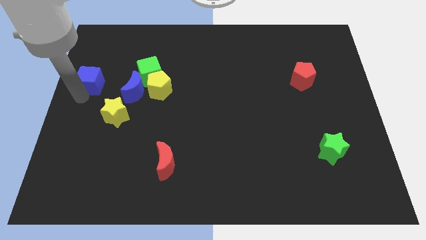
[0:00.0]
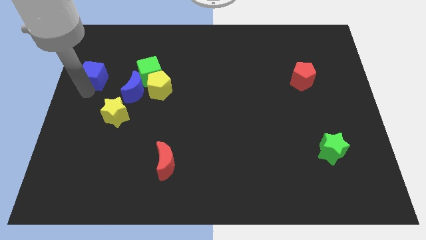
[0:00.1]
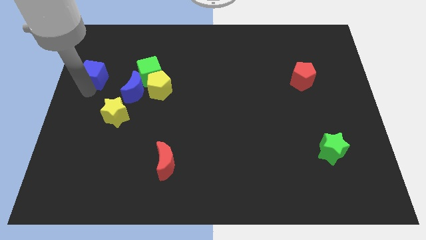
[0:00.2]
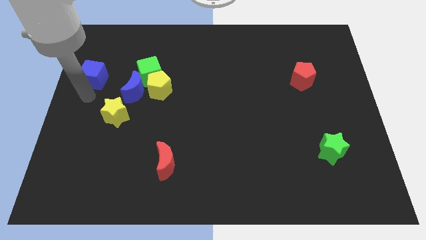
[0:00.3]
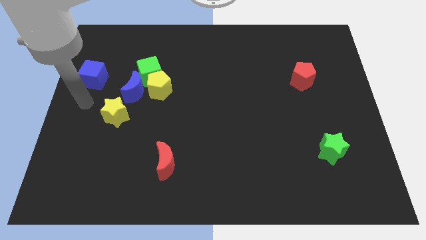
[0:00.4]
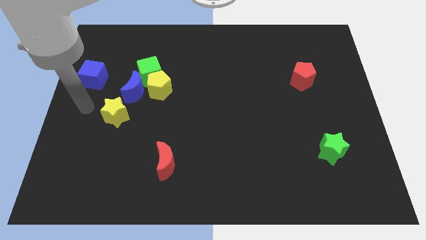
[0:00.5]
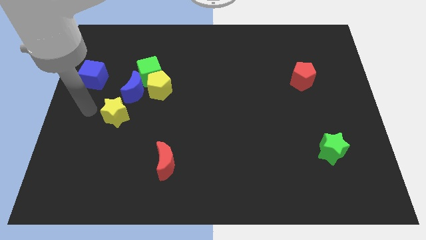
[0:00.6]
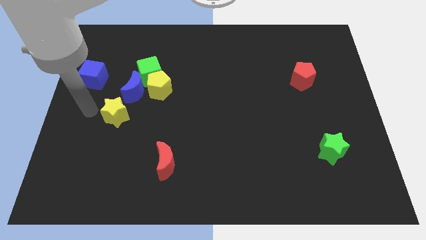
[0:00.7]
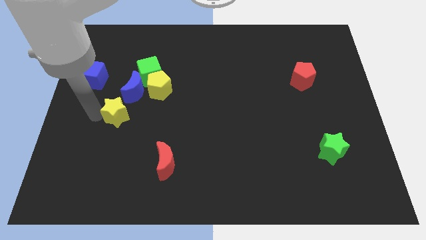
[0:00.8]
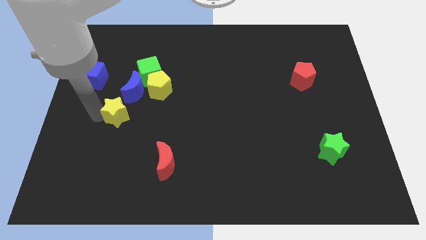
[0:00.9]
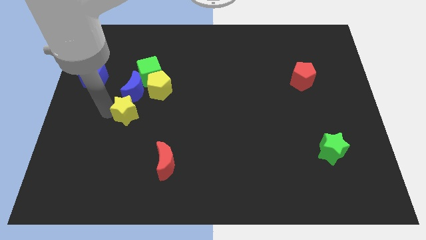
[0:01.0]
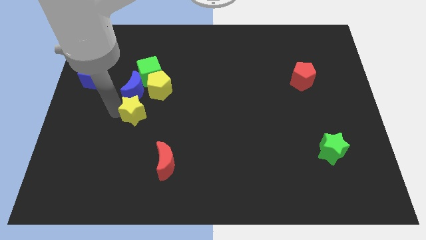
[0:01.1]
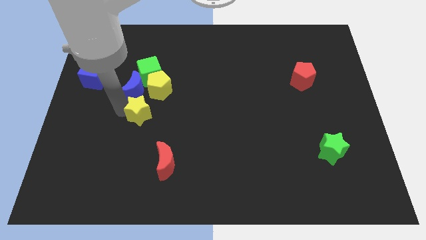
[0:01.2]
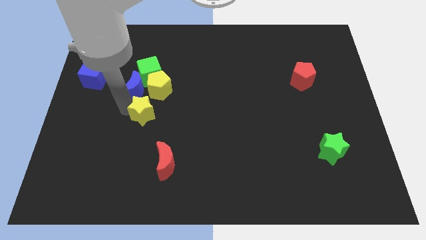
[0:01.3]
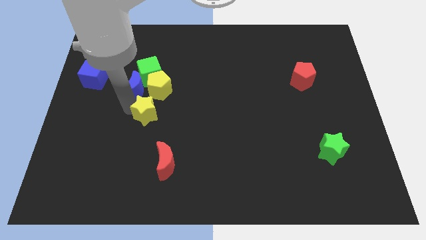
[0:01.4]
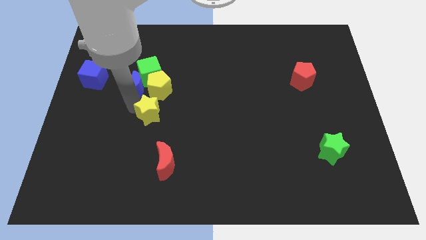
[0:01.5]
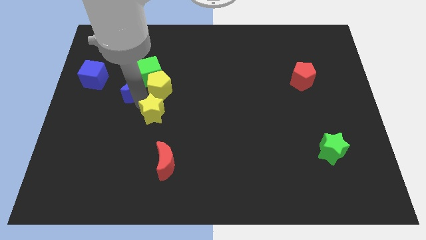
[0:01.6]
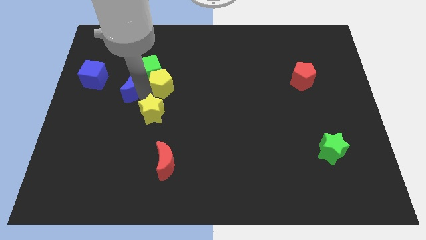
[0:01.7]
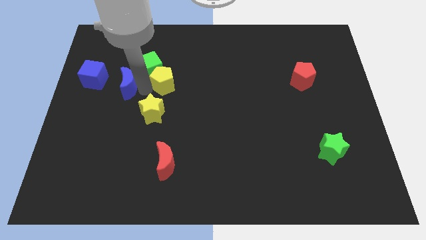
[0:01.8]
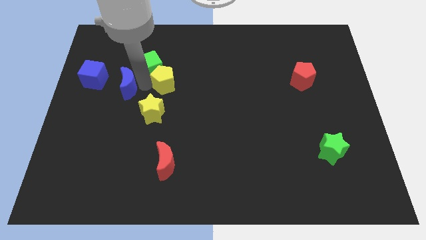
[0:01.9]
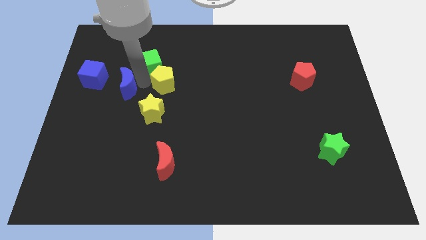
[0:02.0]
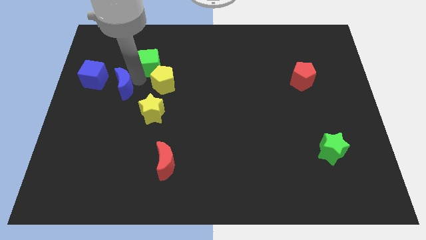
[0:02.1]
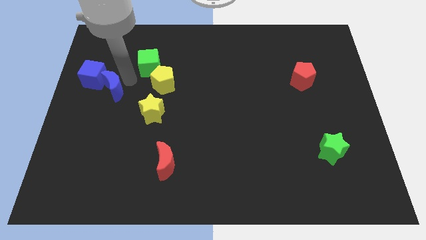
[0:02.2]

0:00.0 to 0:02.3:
move the yellow star parallel to the top of the red crescent

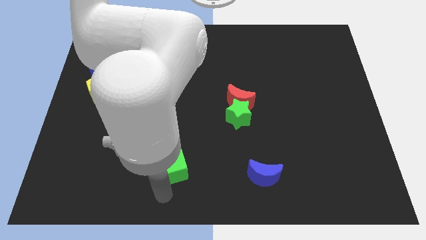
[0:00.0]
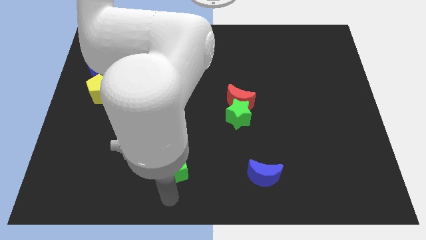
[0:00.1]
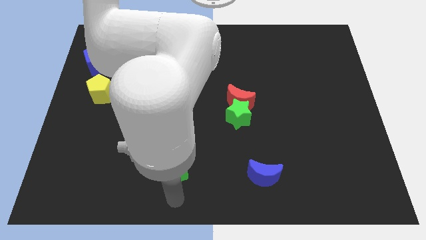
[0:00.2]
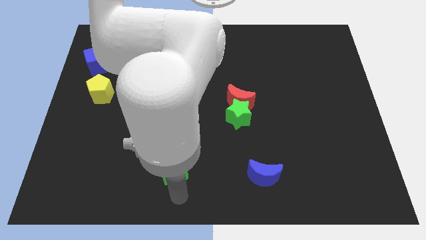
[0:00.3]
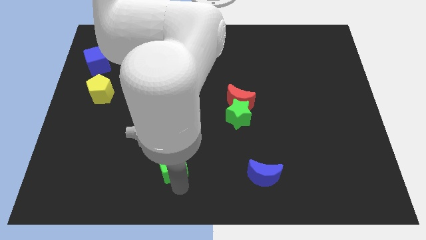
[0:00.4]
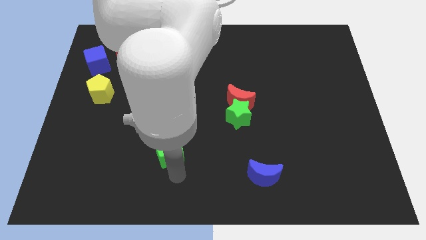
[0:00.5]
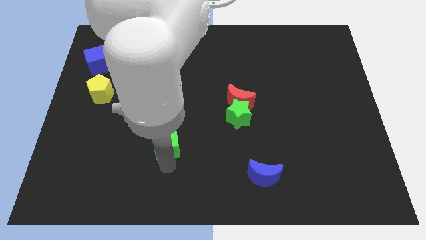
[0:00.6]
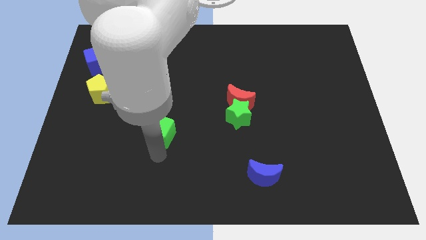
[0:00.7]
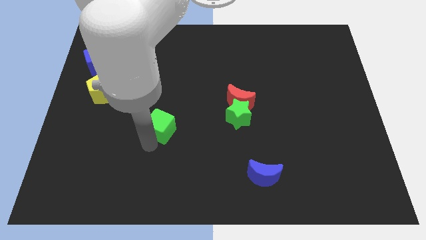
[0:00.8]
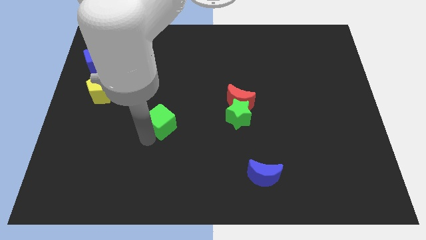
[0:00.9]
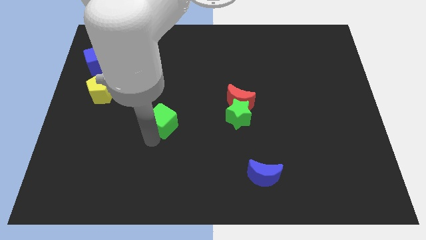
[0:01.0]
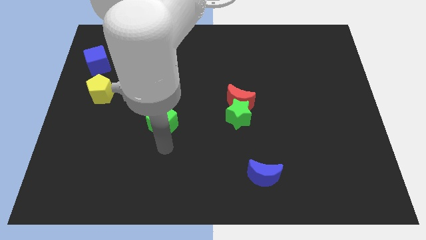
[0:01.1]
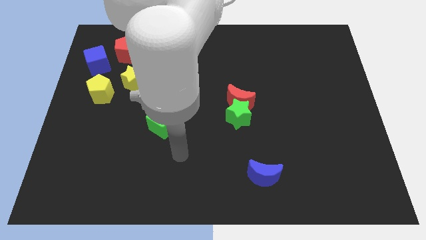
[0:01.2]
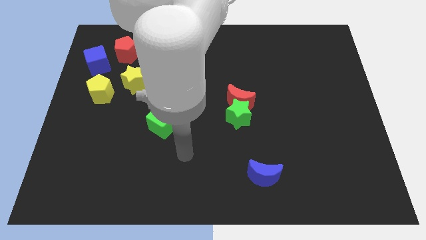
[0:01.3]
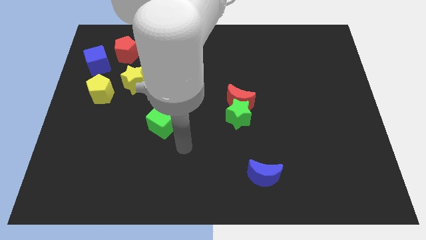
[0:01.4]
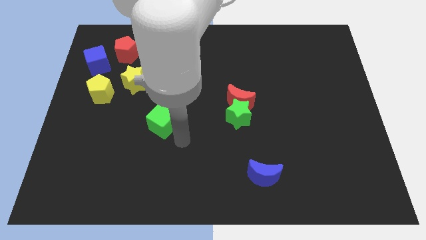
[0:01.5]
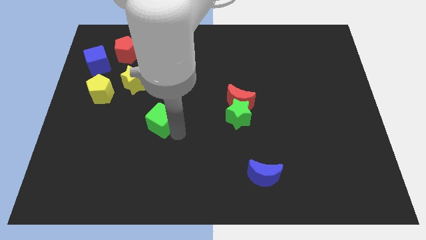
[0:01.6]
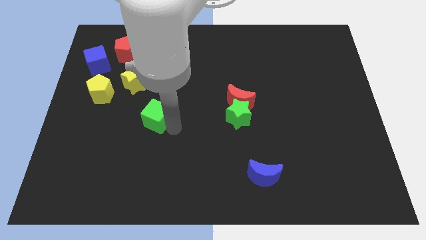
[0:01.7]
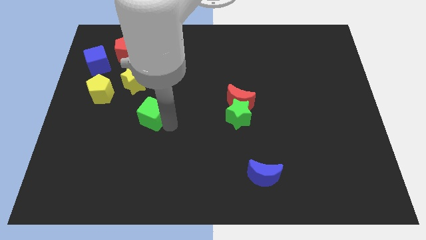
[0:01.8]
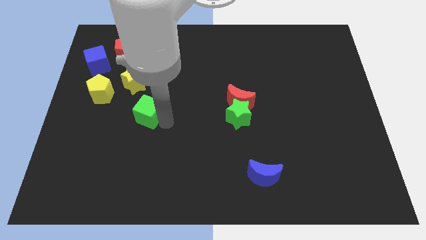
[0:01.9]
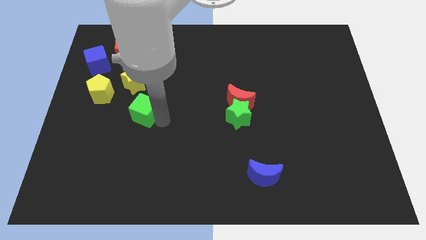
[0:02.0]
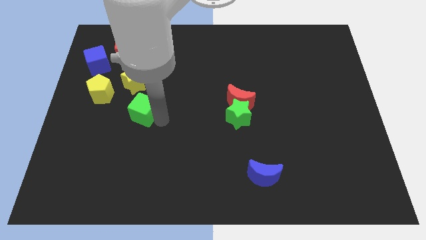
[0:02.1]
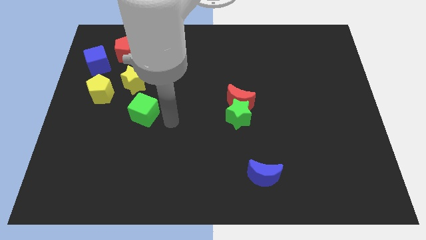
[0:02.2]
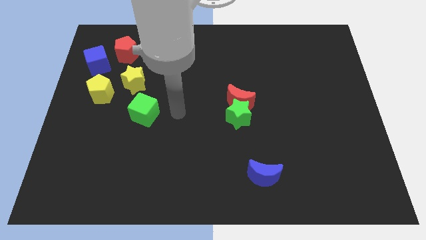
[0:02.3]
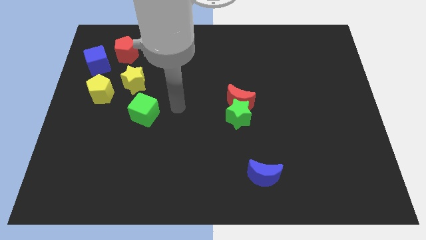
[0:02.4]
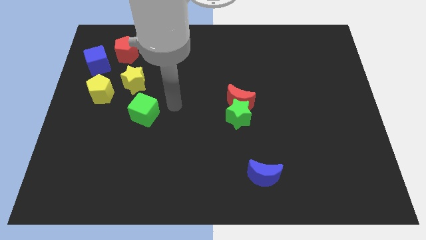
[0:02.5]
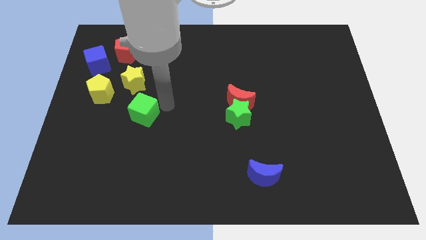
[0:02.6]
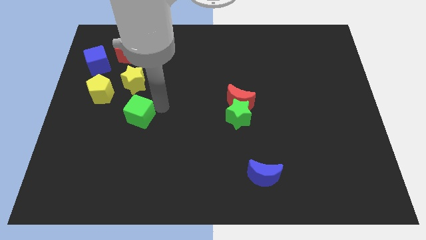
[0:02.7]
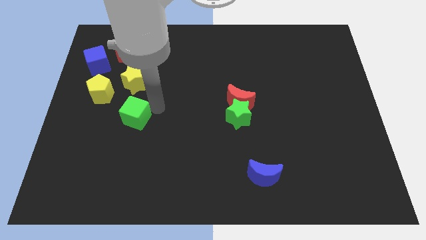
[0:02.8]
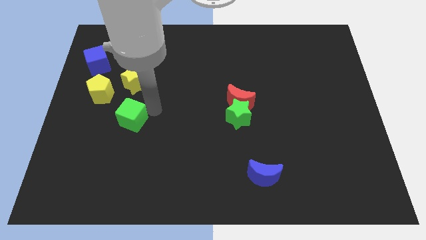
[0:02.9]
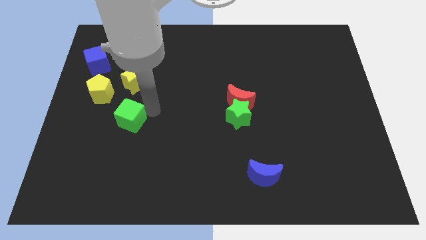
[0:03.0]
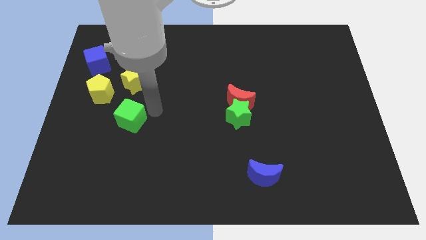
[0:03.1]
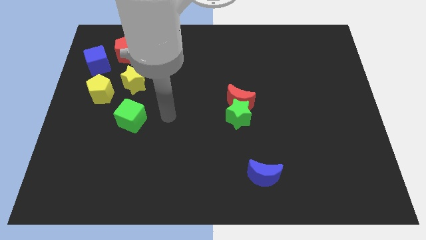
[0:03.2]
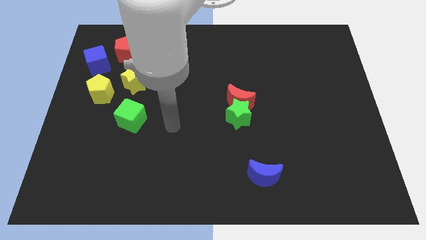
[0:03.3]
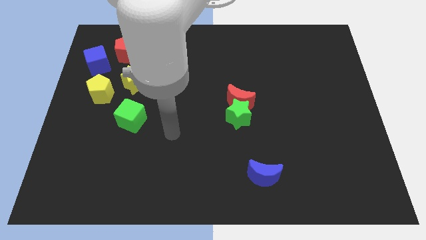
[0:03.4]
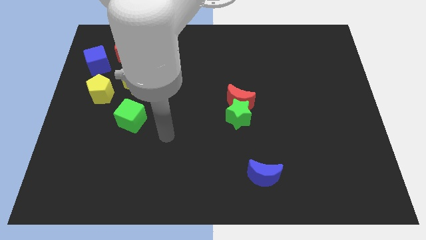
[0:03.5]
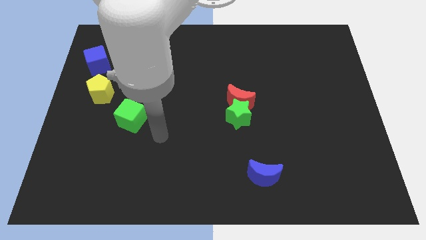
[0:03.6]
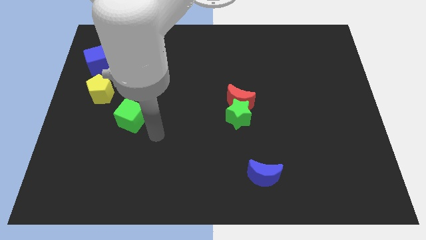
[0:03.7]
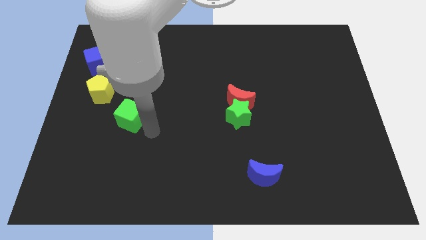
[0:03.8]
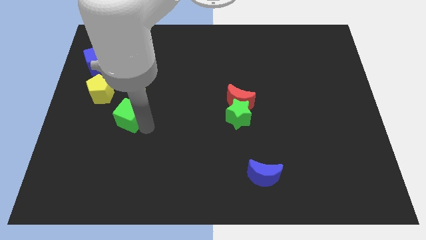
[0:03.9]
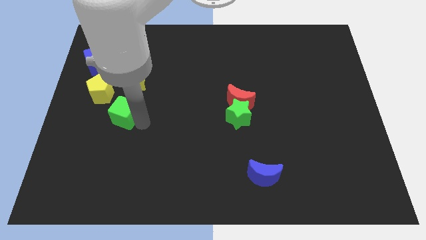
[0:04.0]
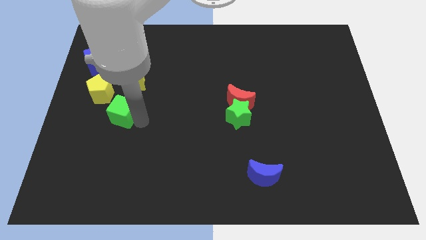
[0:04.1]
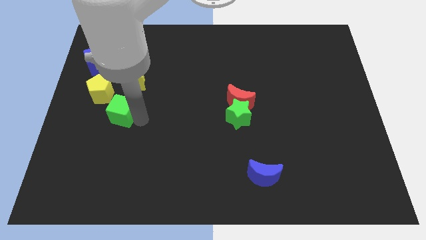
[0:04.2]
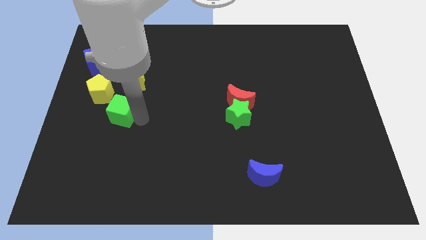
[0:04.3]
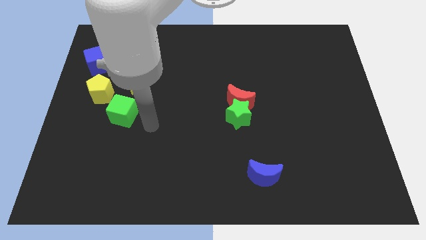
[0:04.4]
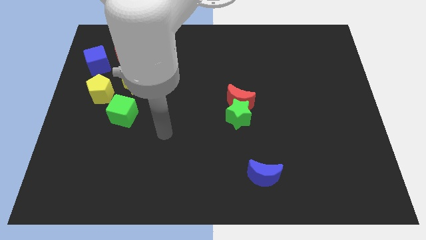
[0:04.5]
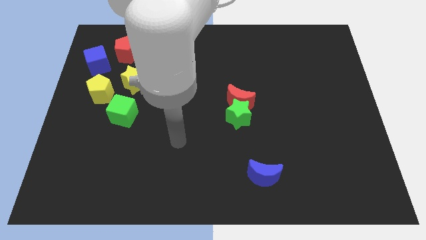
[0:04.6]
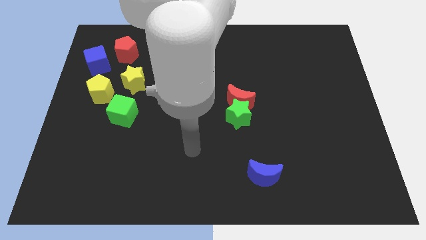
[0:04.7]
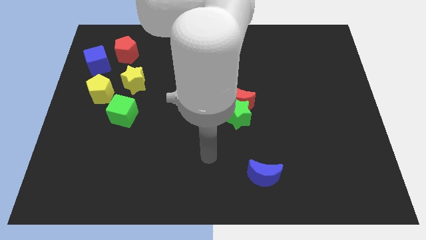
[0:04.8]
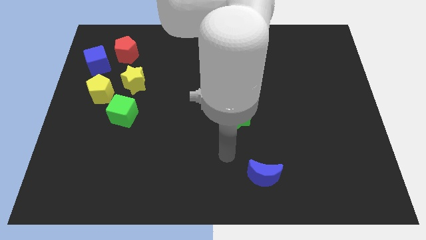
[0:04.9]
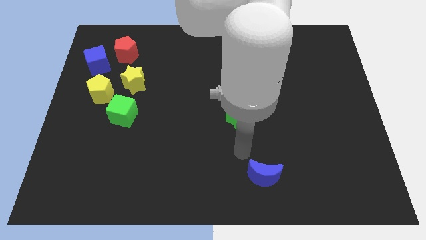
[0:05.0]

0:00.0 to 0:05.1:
push the green cube to the bottom right corner of the yellow pentagon

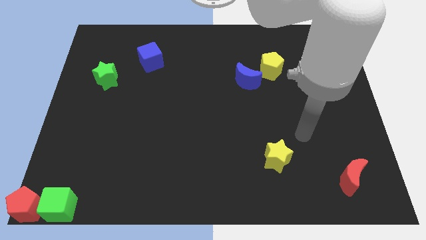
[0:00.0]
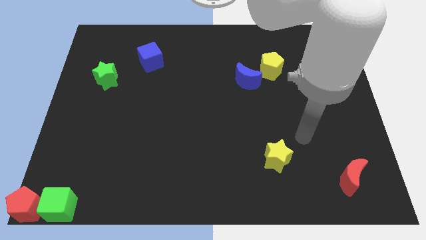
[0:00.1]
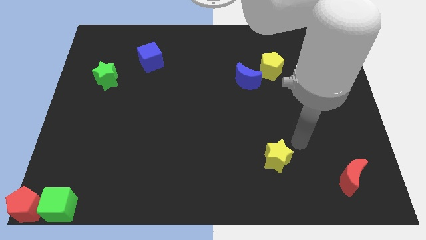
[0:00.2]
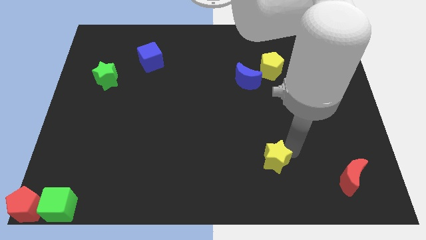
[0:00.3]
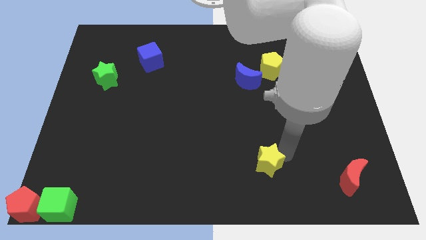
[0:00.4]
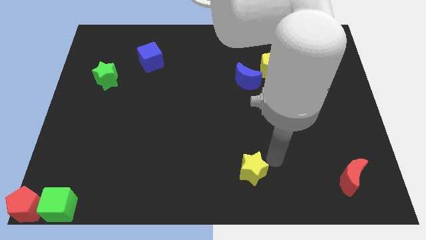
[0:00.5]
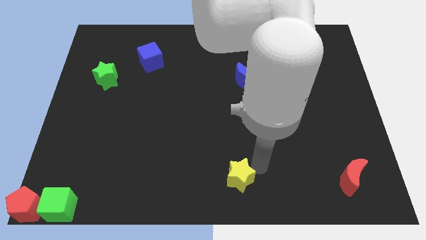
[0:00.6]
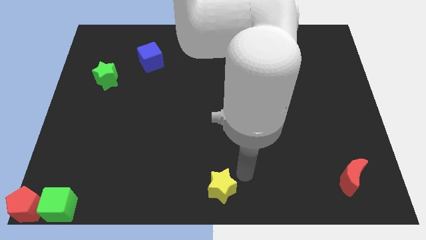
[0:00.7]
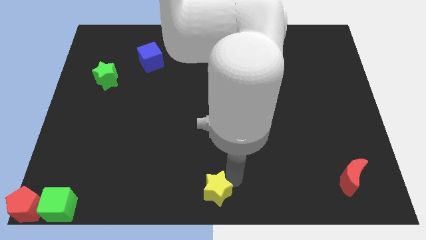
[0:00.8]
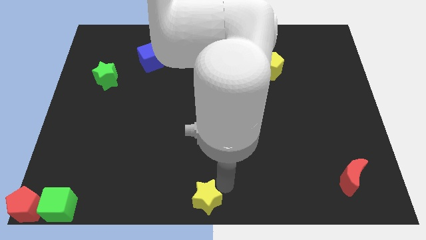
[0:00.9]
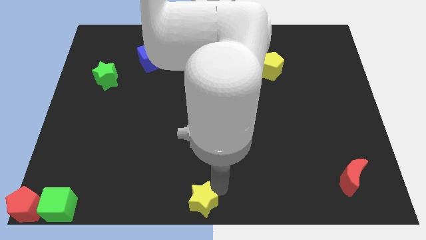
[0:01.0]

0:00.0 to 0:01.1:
place the yellow star at the bottom center of the board

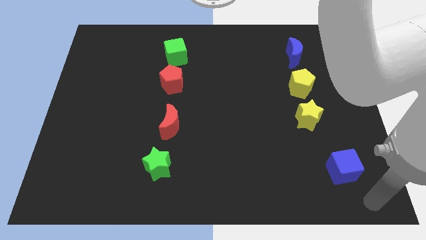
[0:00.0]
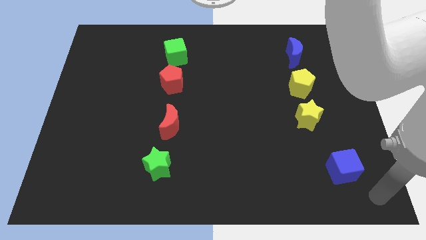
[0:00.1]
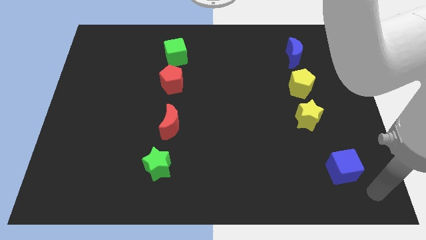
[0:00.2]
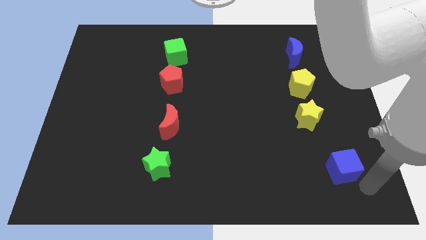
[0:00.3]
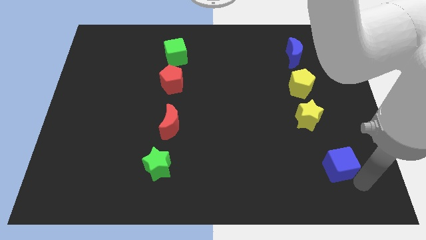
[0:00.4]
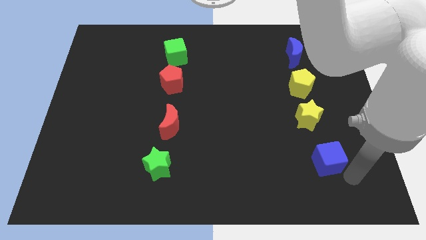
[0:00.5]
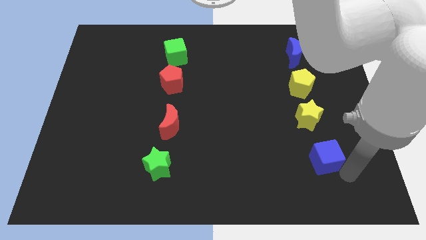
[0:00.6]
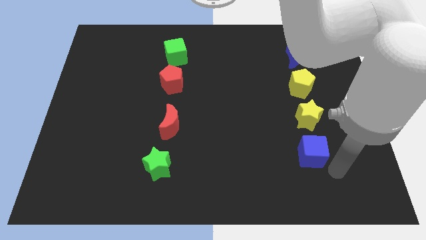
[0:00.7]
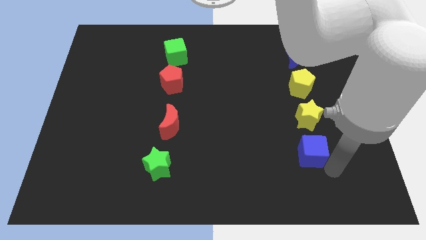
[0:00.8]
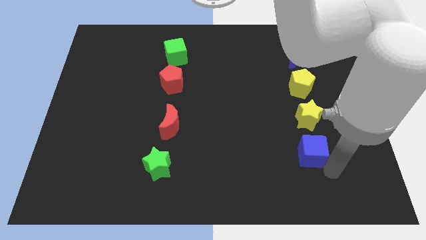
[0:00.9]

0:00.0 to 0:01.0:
move the blue cube below the yellow star
